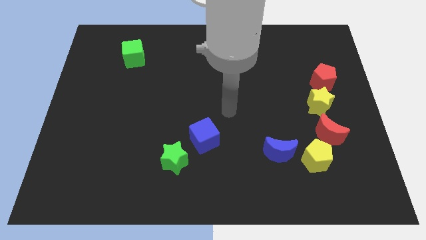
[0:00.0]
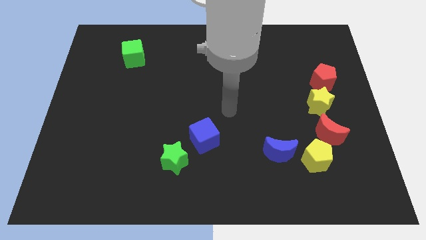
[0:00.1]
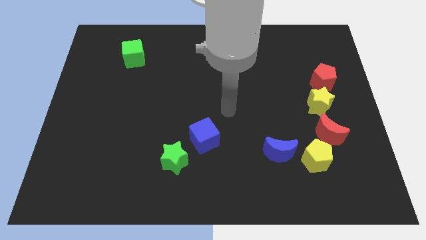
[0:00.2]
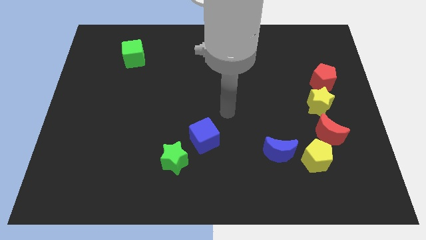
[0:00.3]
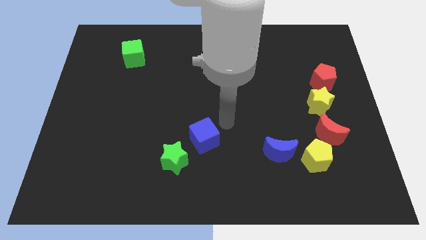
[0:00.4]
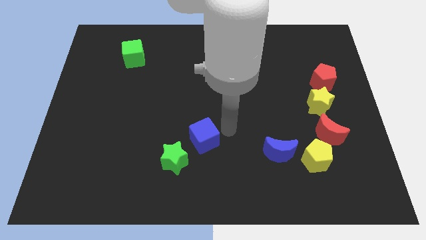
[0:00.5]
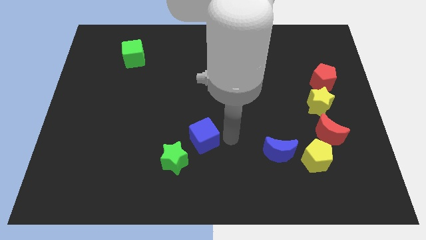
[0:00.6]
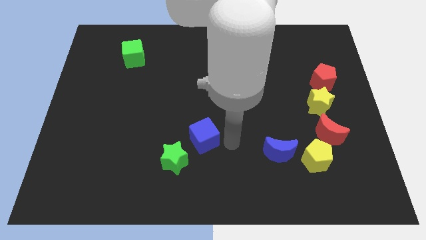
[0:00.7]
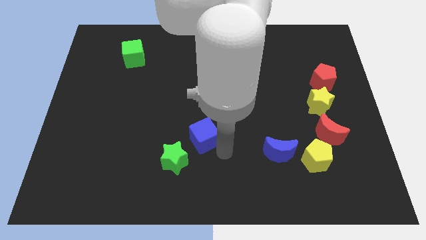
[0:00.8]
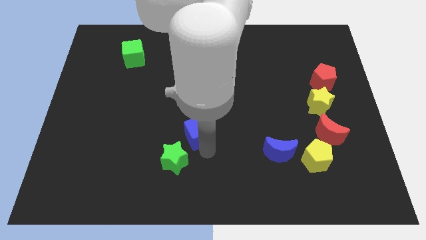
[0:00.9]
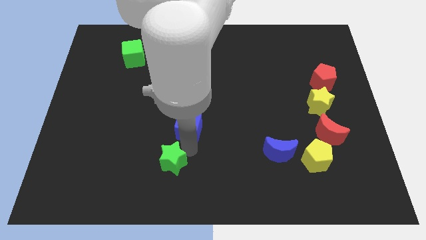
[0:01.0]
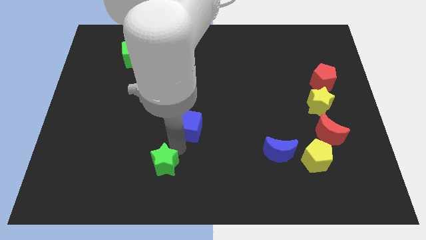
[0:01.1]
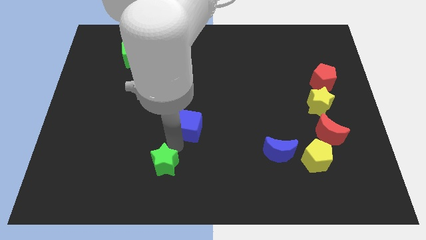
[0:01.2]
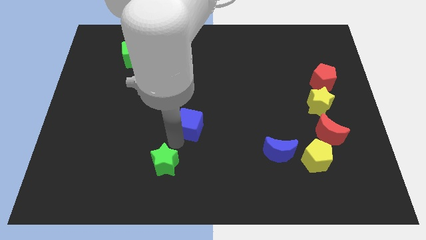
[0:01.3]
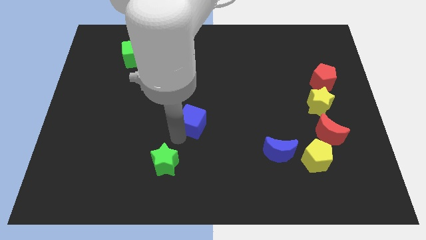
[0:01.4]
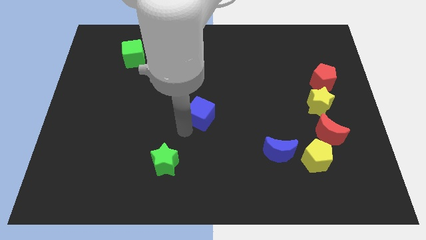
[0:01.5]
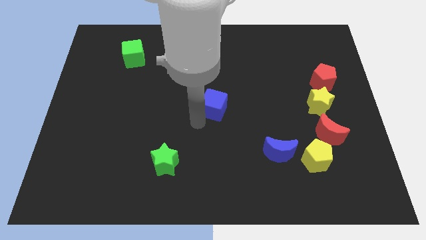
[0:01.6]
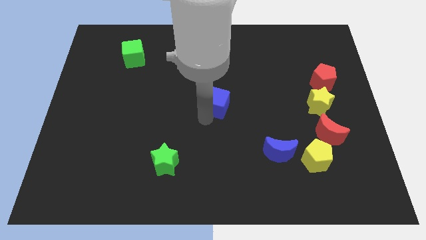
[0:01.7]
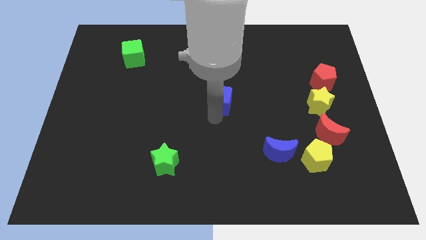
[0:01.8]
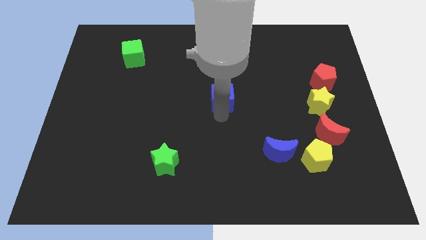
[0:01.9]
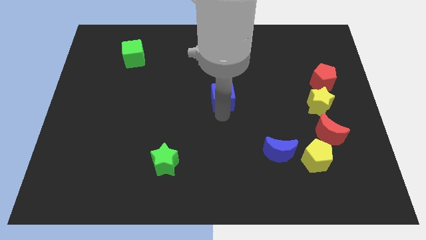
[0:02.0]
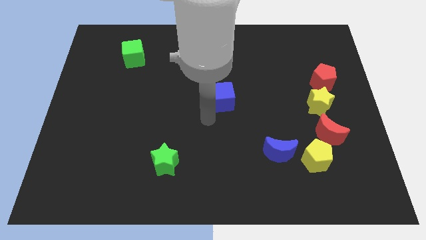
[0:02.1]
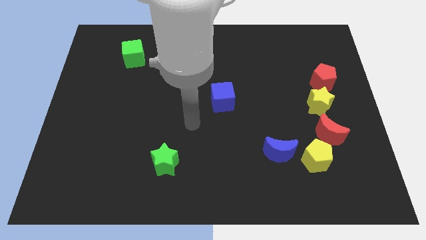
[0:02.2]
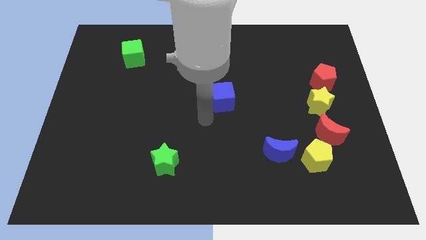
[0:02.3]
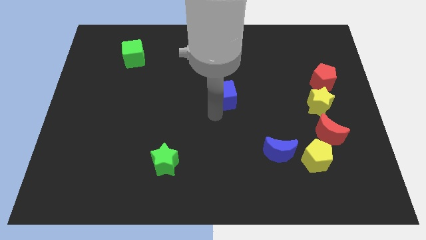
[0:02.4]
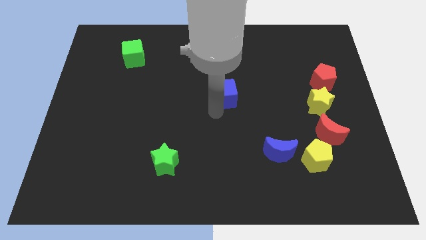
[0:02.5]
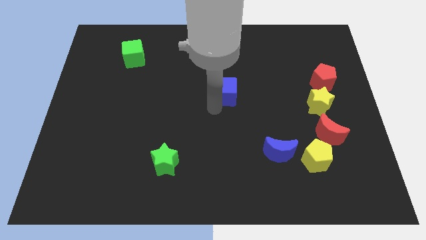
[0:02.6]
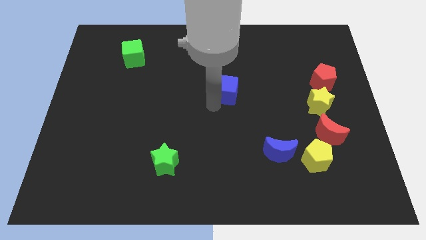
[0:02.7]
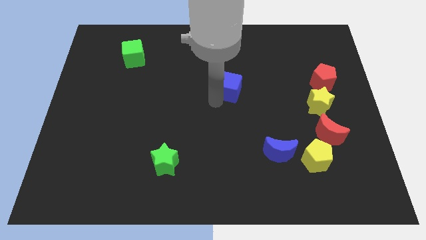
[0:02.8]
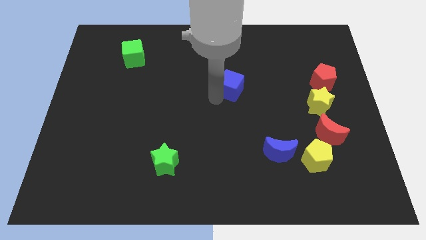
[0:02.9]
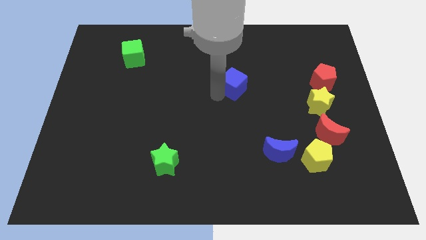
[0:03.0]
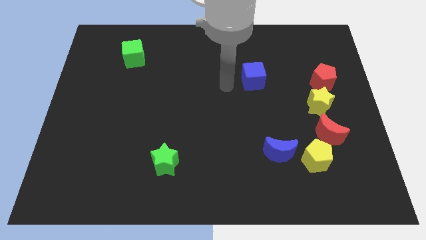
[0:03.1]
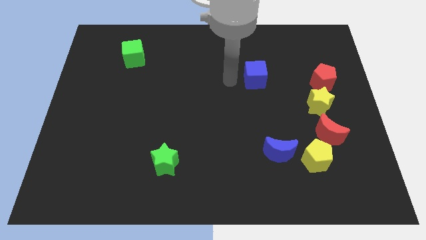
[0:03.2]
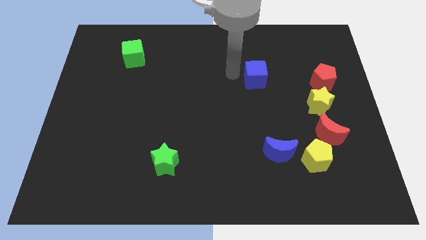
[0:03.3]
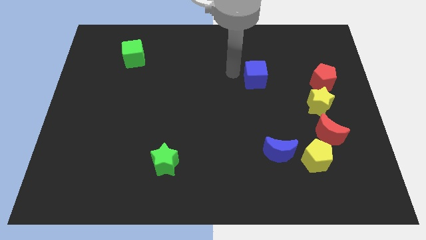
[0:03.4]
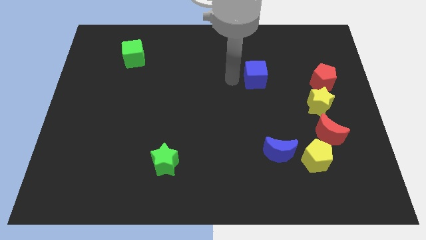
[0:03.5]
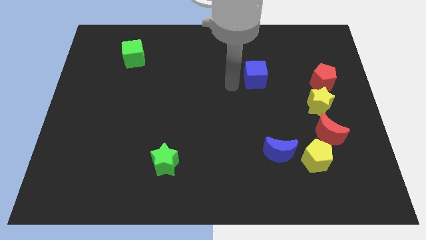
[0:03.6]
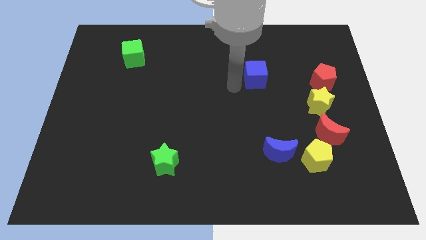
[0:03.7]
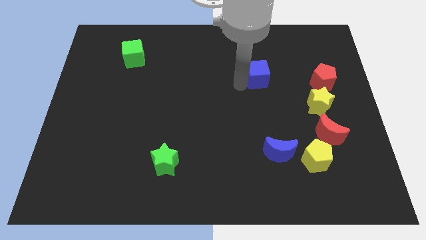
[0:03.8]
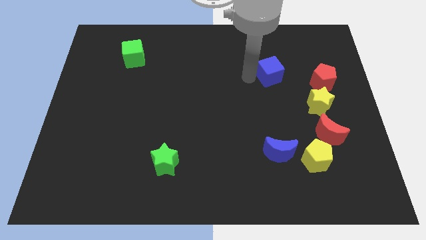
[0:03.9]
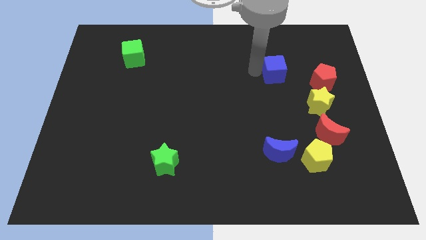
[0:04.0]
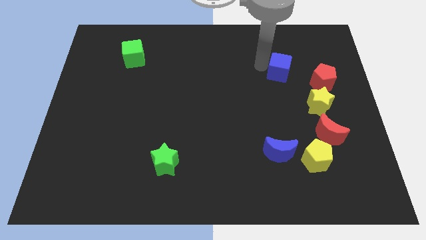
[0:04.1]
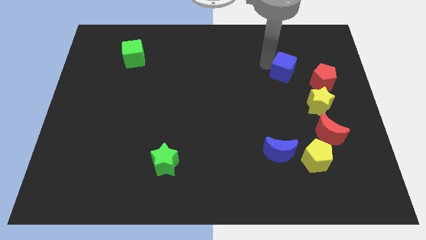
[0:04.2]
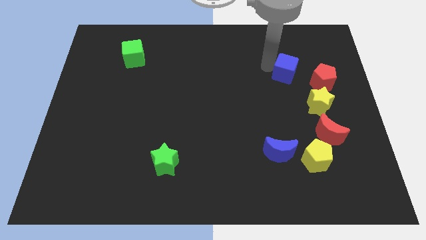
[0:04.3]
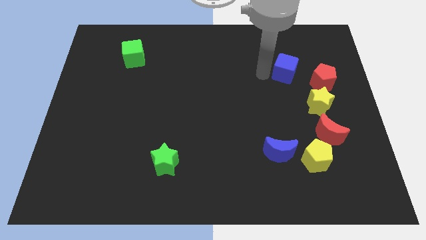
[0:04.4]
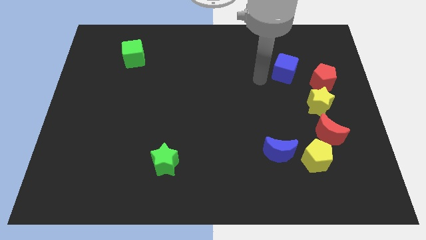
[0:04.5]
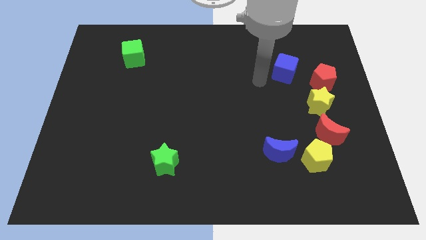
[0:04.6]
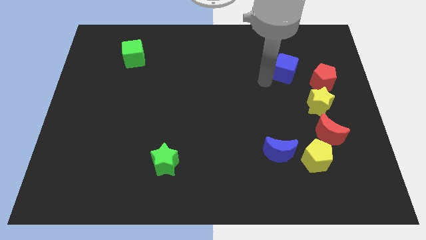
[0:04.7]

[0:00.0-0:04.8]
move the blue cube to the top of the board

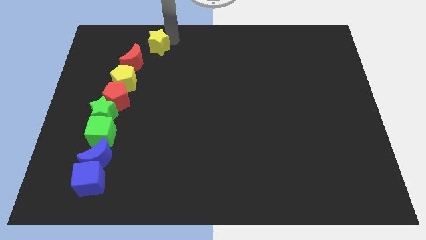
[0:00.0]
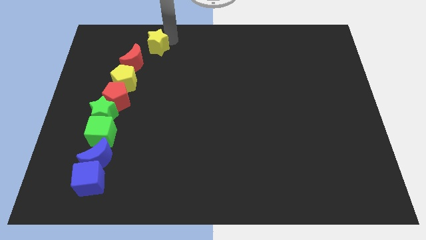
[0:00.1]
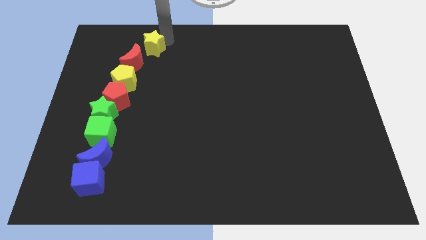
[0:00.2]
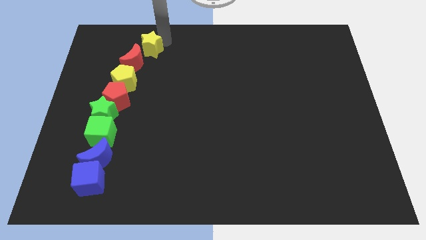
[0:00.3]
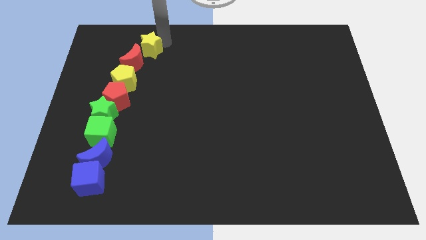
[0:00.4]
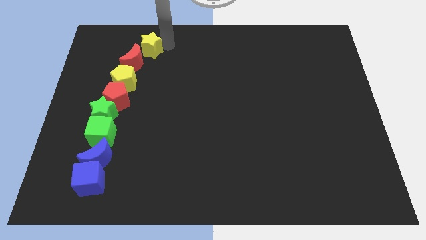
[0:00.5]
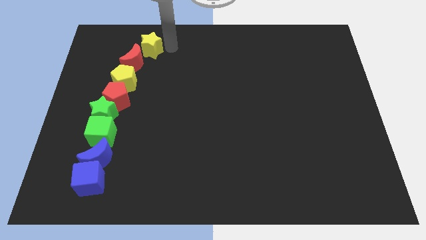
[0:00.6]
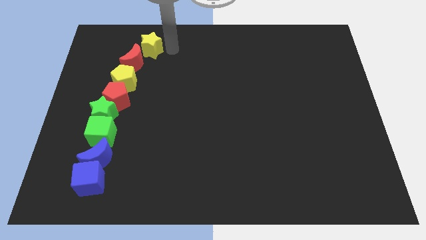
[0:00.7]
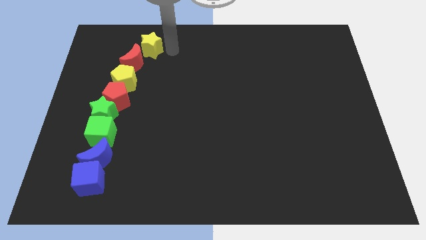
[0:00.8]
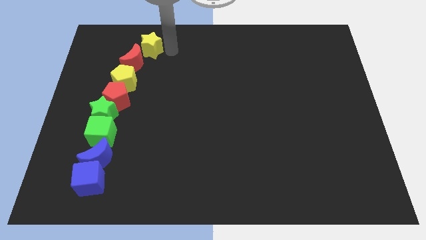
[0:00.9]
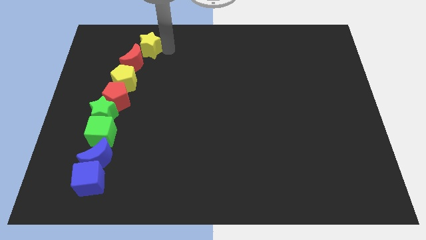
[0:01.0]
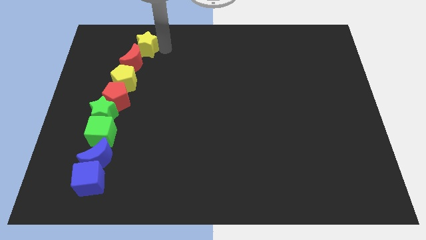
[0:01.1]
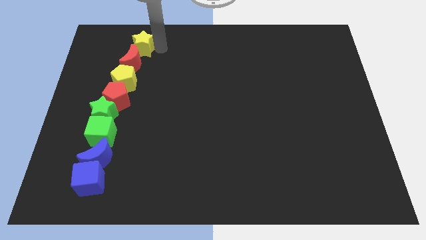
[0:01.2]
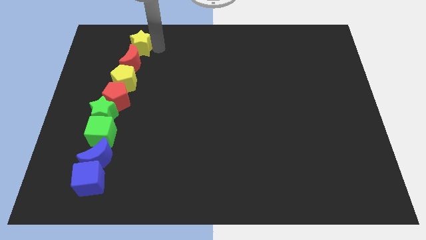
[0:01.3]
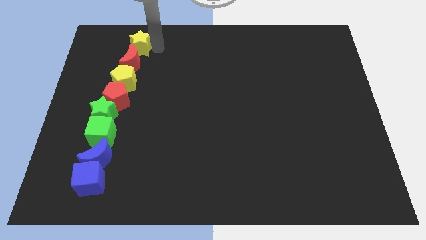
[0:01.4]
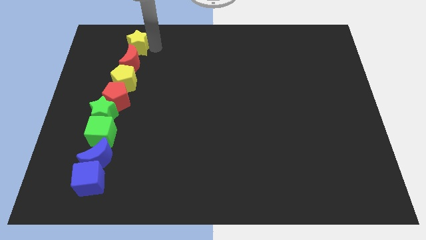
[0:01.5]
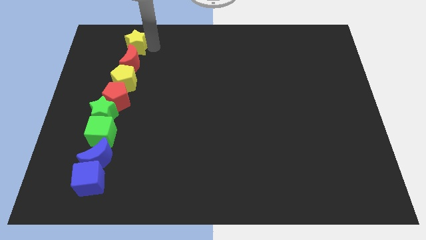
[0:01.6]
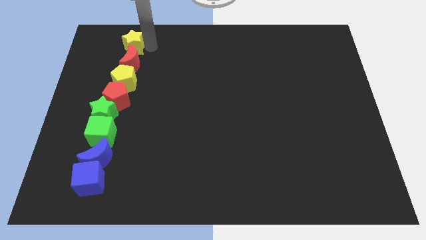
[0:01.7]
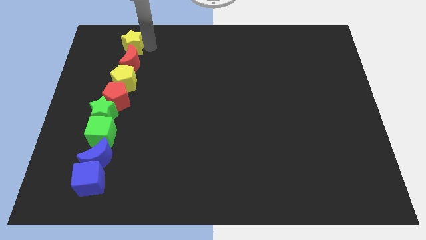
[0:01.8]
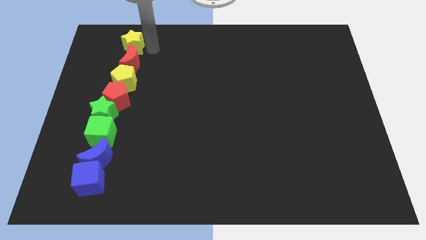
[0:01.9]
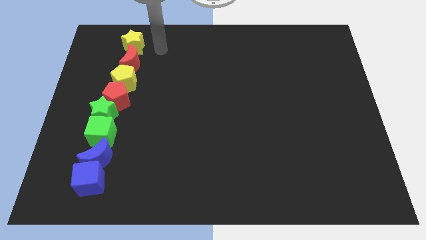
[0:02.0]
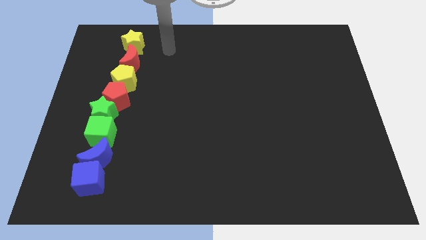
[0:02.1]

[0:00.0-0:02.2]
place the yellow star above to the red moon to form a vertical line

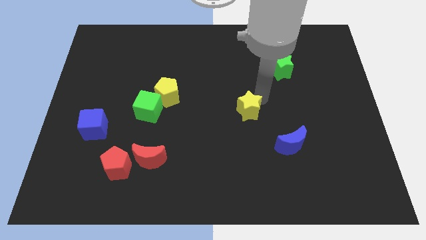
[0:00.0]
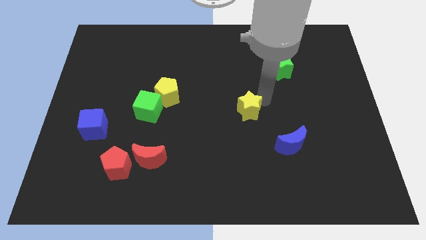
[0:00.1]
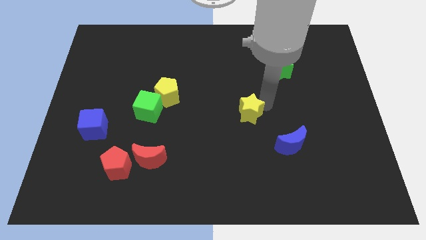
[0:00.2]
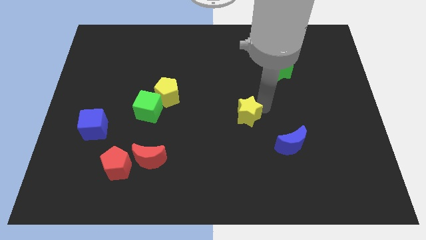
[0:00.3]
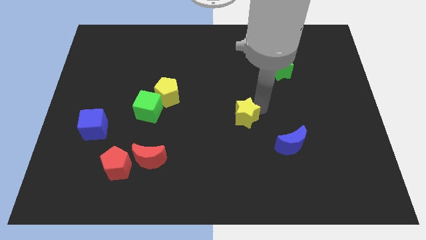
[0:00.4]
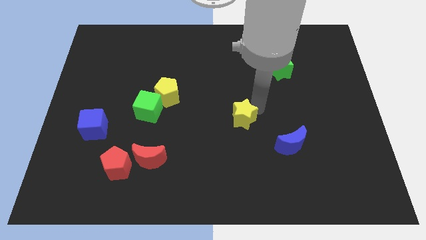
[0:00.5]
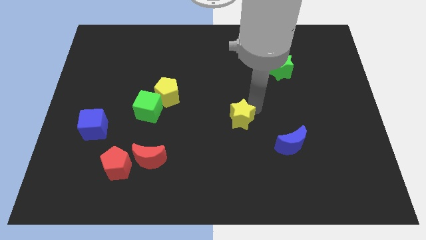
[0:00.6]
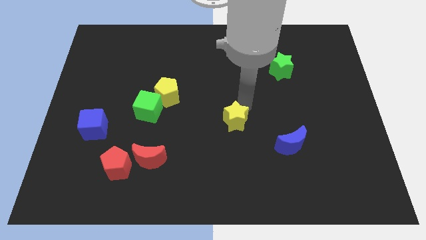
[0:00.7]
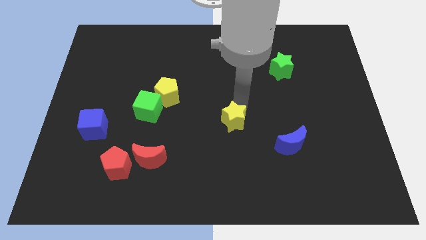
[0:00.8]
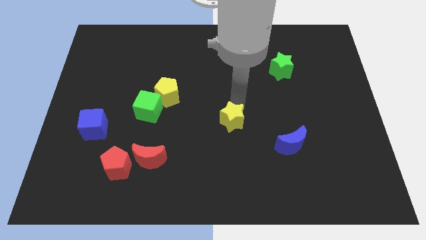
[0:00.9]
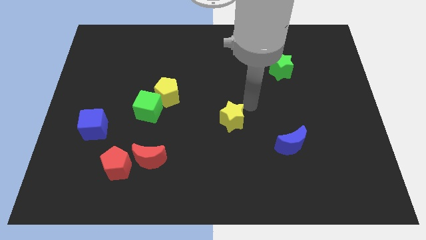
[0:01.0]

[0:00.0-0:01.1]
move the yellow star to the center of the board

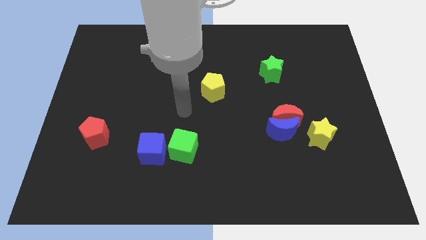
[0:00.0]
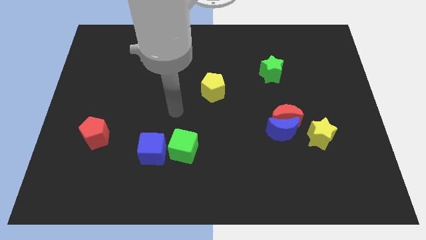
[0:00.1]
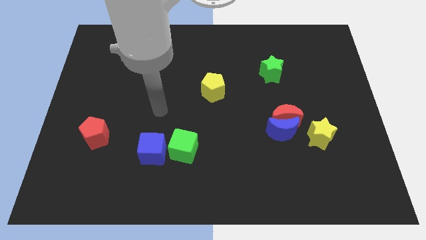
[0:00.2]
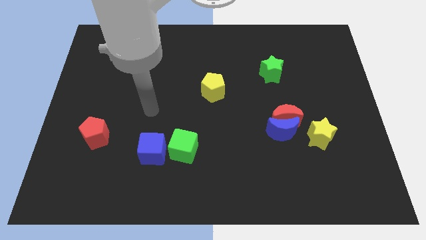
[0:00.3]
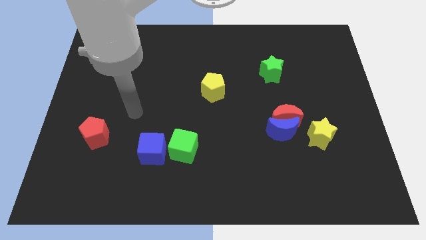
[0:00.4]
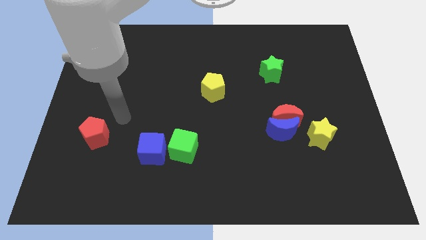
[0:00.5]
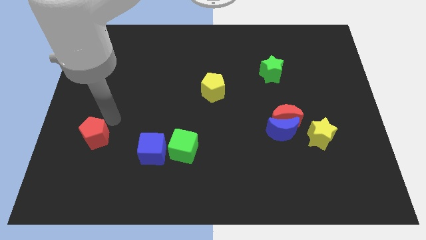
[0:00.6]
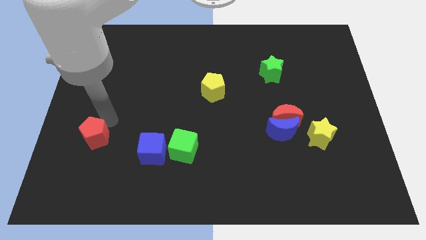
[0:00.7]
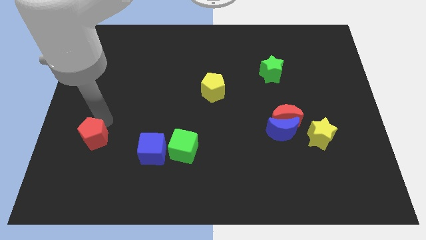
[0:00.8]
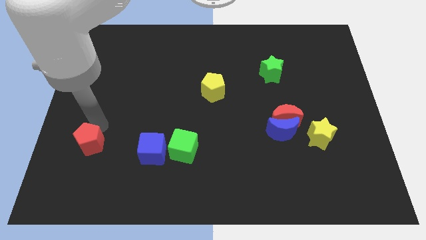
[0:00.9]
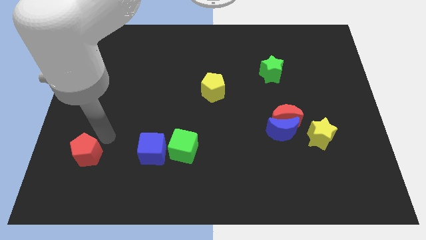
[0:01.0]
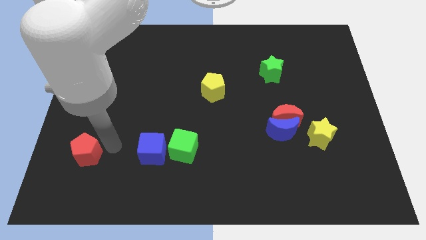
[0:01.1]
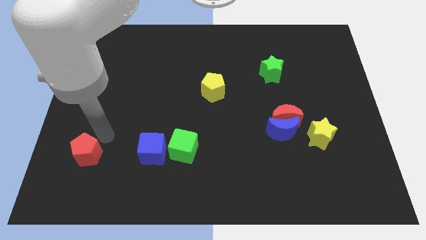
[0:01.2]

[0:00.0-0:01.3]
slightly push the red pentagon to the bottom of the board
